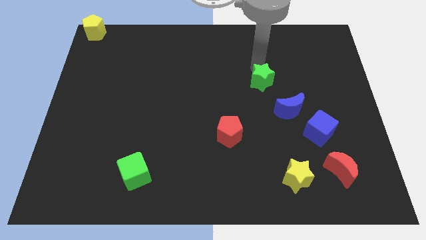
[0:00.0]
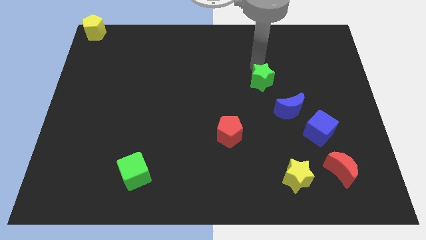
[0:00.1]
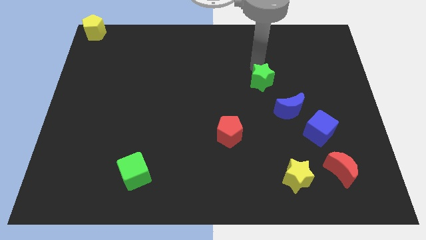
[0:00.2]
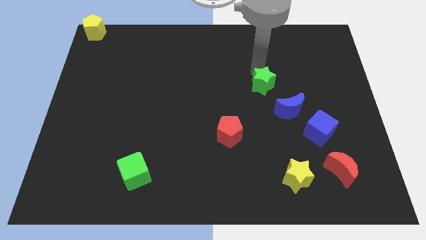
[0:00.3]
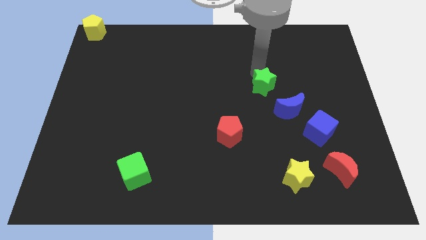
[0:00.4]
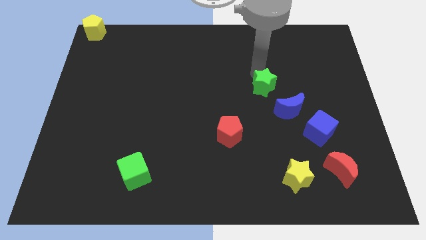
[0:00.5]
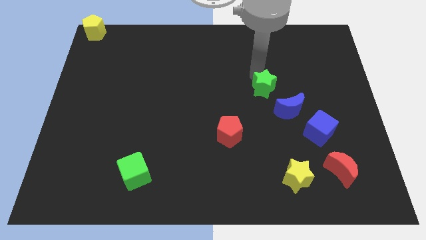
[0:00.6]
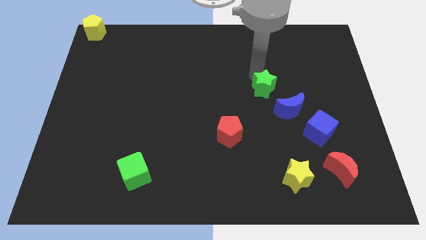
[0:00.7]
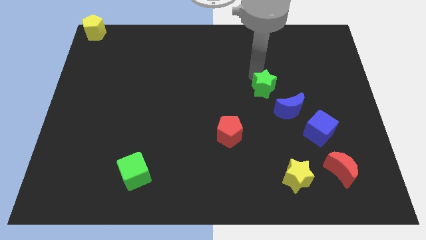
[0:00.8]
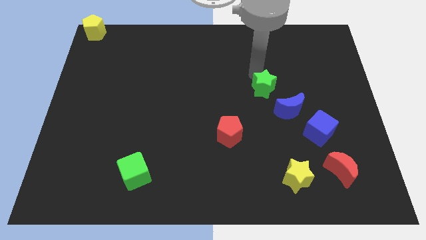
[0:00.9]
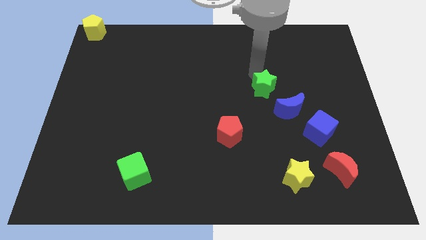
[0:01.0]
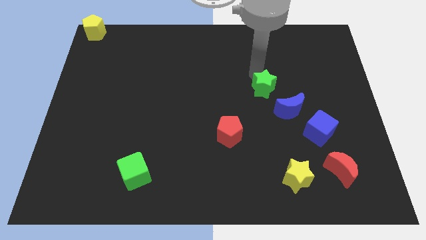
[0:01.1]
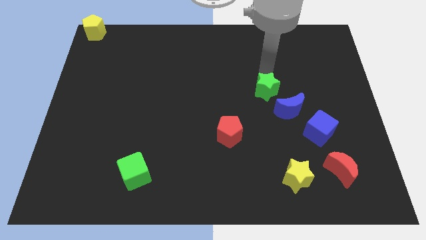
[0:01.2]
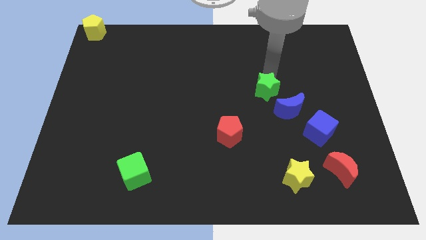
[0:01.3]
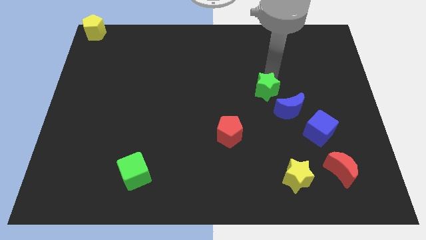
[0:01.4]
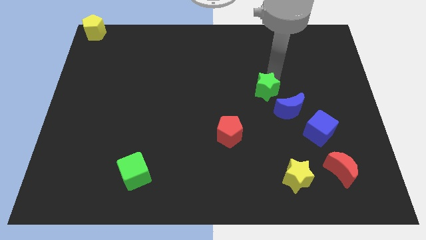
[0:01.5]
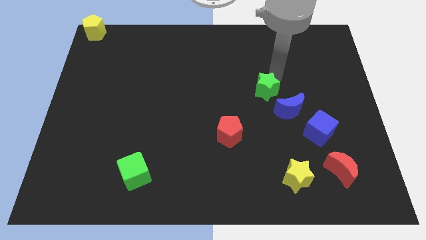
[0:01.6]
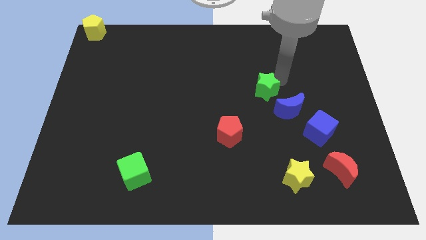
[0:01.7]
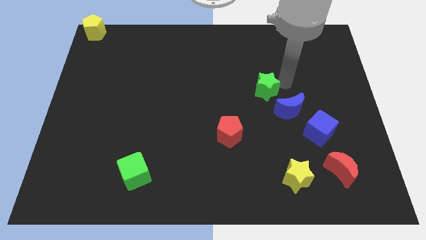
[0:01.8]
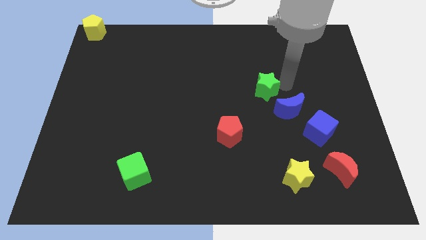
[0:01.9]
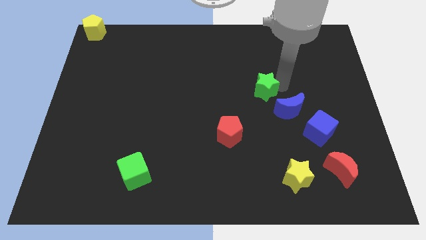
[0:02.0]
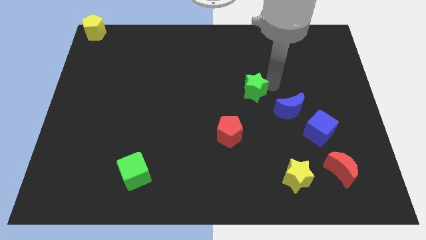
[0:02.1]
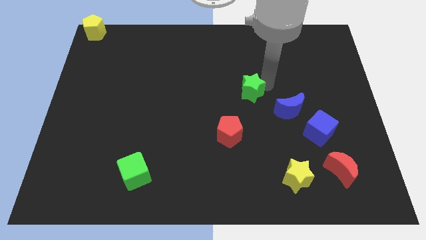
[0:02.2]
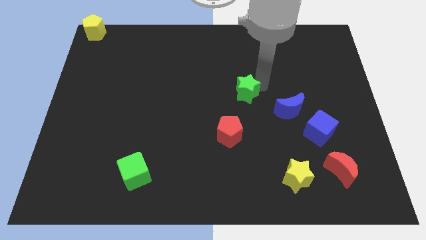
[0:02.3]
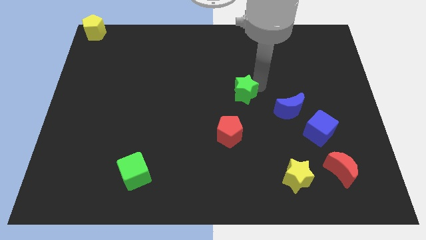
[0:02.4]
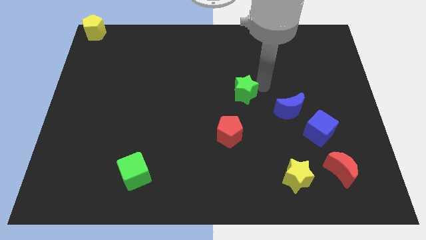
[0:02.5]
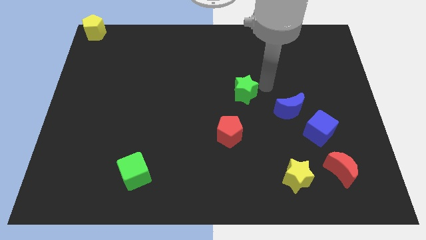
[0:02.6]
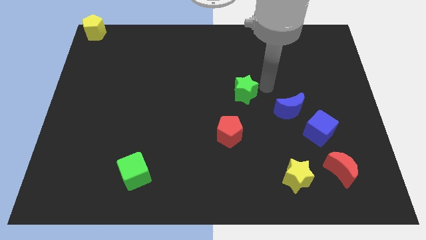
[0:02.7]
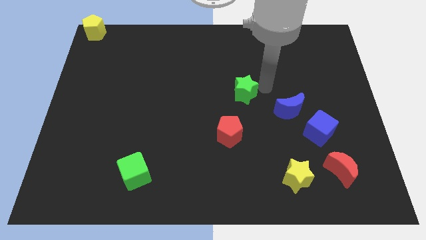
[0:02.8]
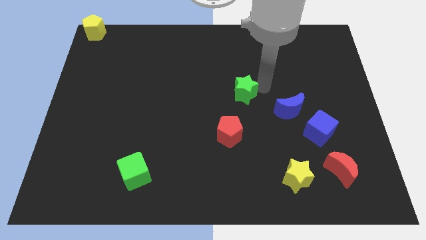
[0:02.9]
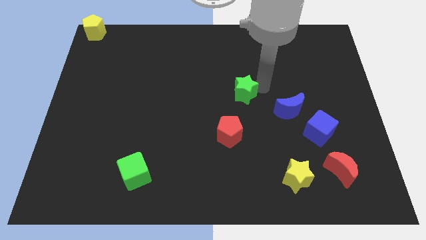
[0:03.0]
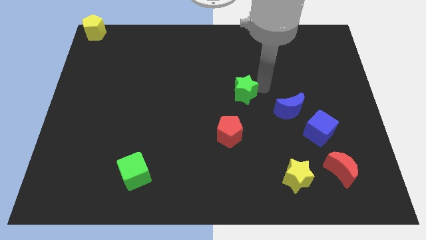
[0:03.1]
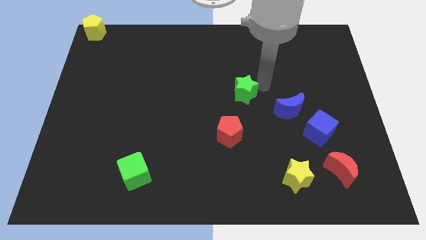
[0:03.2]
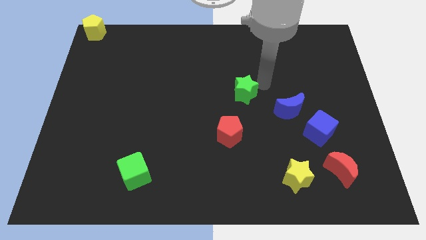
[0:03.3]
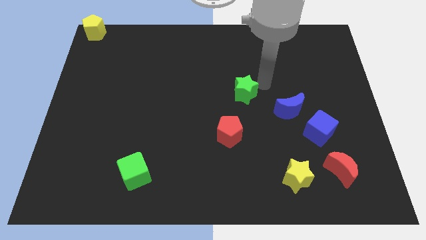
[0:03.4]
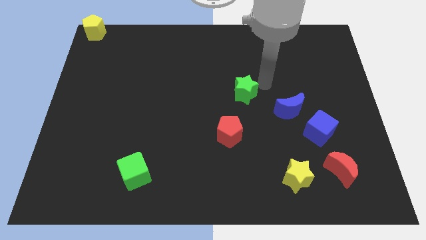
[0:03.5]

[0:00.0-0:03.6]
push the green star slightly to the center of the board

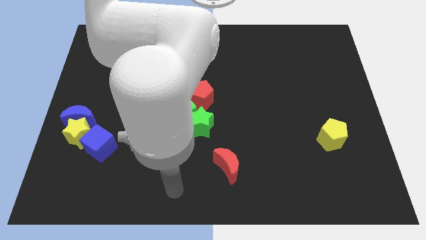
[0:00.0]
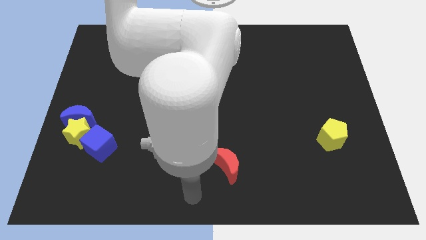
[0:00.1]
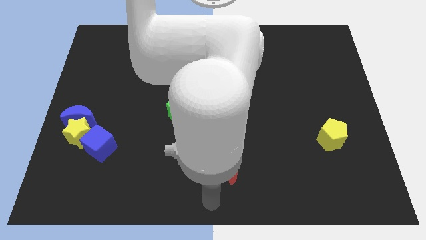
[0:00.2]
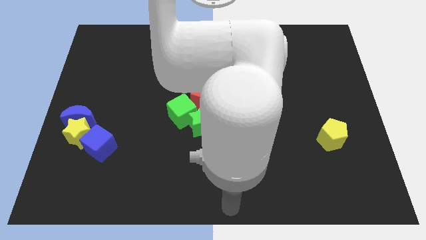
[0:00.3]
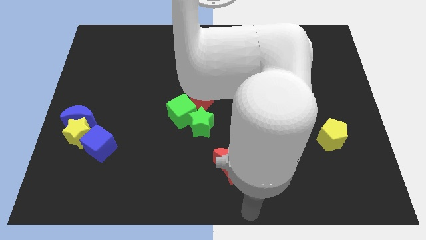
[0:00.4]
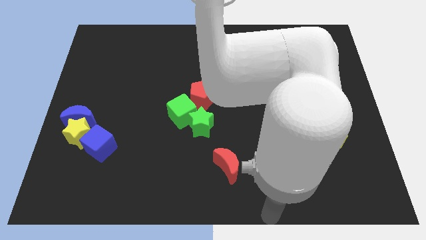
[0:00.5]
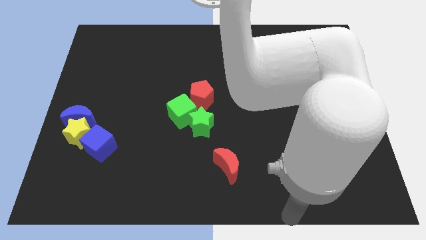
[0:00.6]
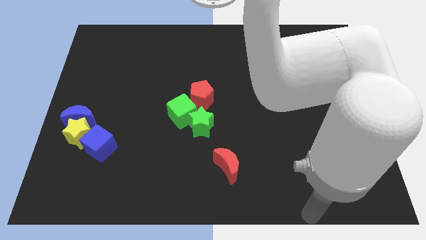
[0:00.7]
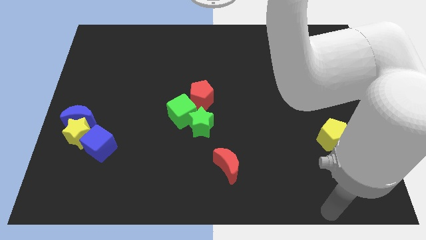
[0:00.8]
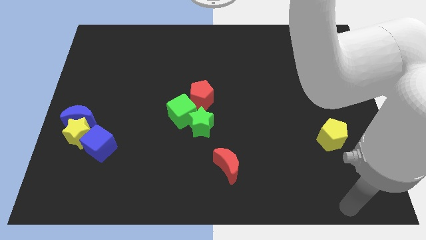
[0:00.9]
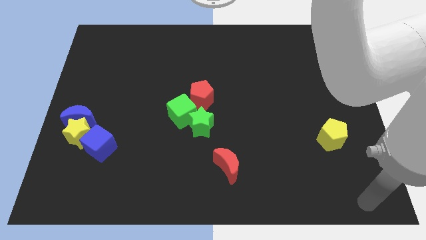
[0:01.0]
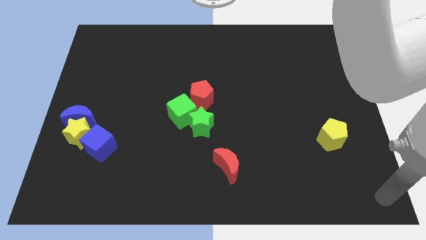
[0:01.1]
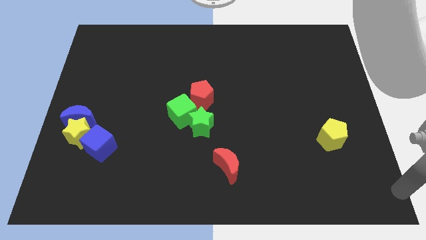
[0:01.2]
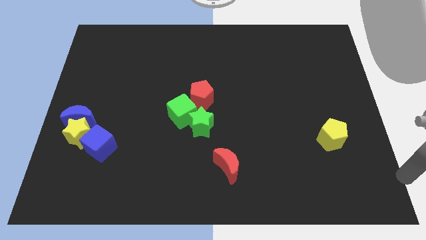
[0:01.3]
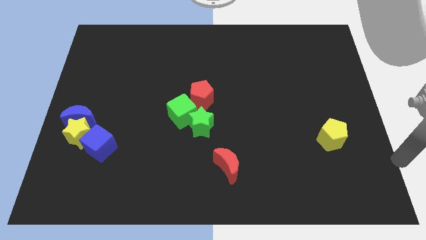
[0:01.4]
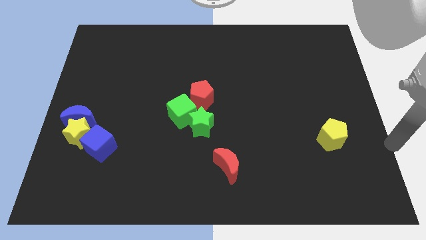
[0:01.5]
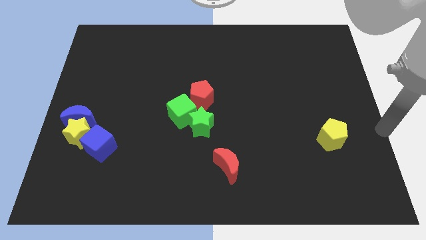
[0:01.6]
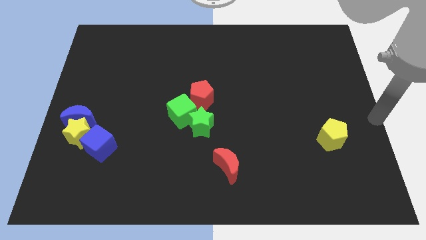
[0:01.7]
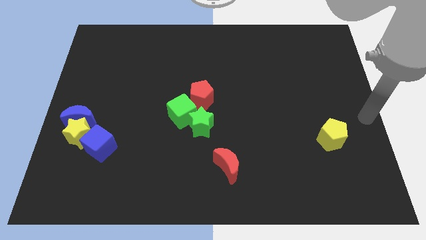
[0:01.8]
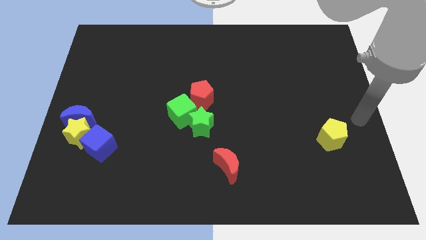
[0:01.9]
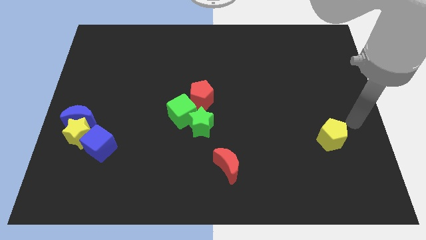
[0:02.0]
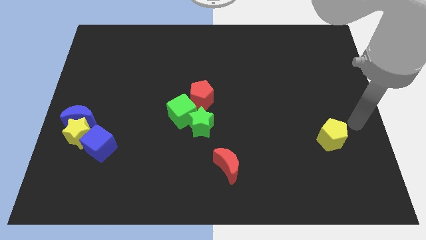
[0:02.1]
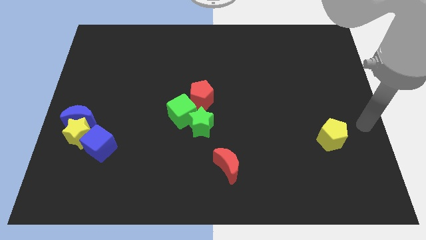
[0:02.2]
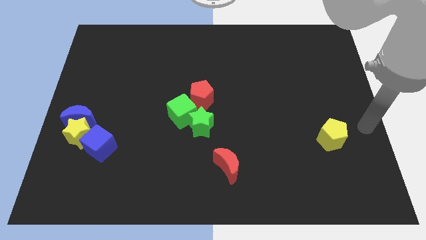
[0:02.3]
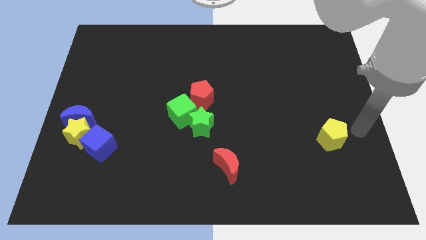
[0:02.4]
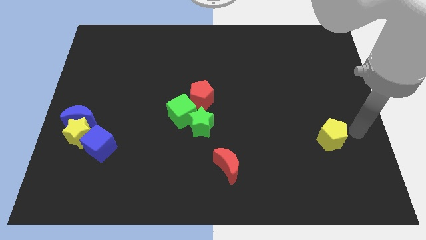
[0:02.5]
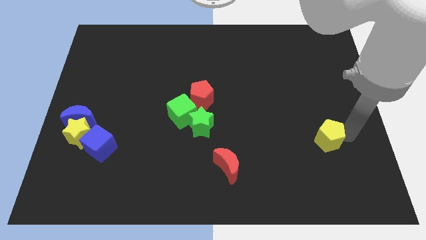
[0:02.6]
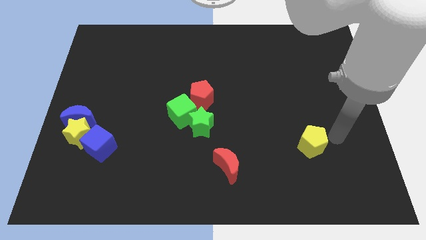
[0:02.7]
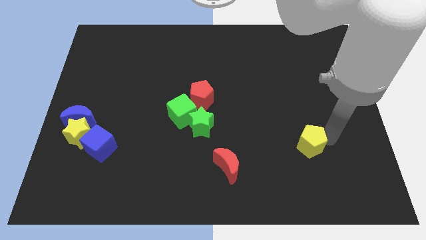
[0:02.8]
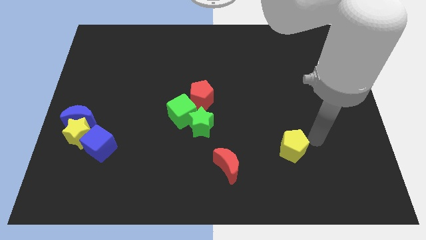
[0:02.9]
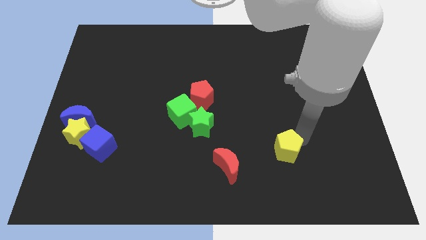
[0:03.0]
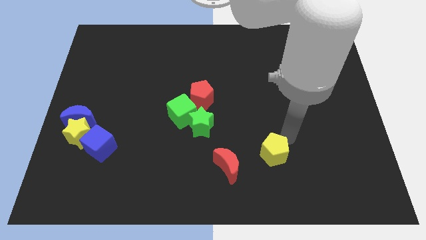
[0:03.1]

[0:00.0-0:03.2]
drag the yellow pentagon towards the red moon

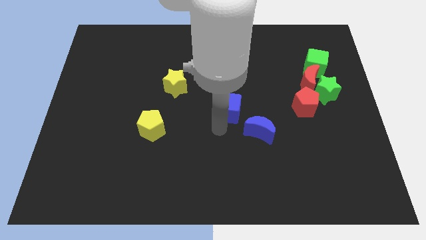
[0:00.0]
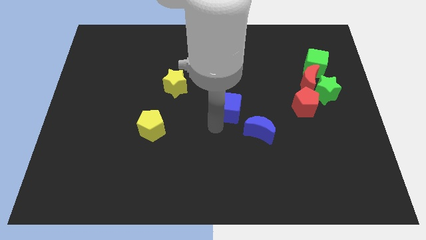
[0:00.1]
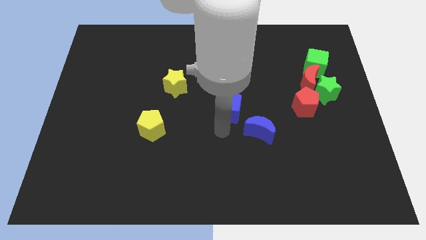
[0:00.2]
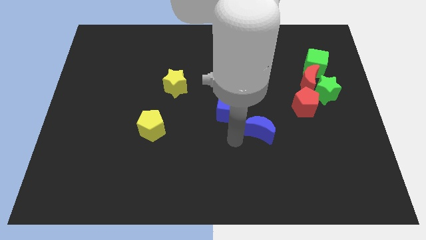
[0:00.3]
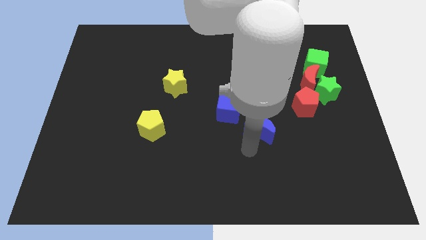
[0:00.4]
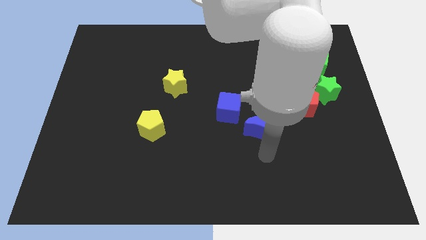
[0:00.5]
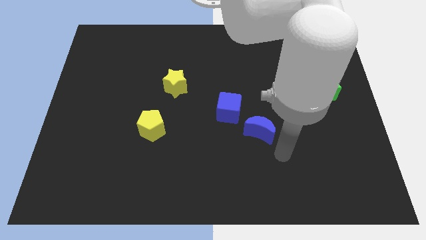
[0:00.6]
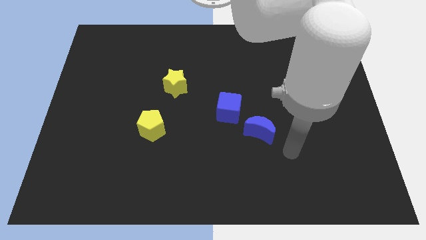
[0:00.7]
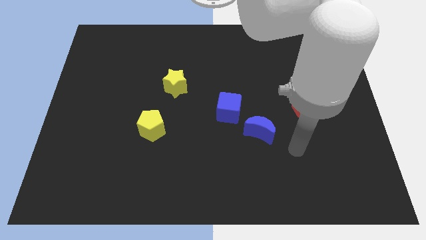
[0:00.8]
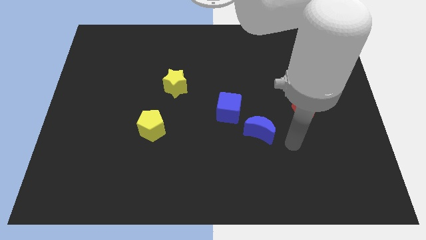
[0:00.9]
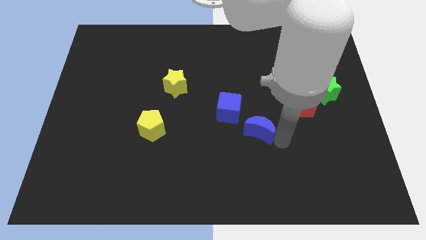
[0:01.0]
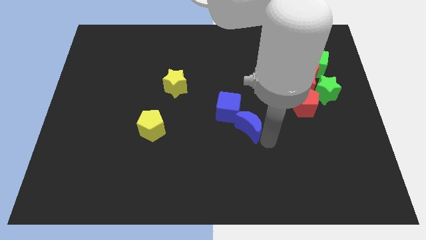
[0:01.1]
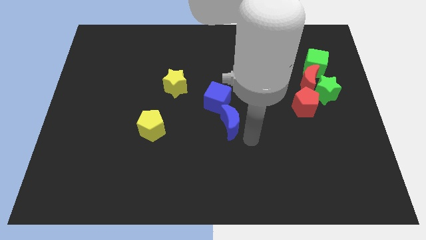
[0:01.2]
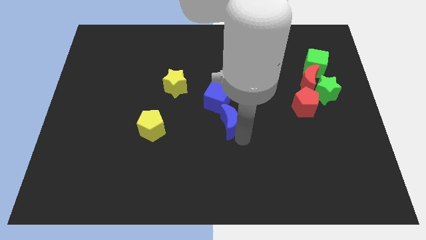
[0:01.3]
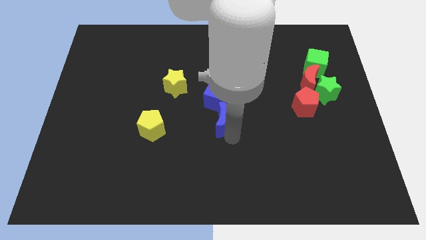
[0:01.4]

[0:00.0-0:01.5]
move blue blocks to the middle of the board

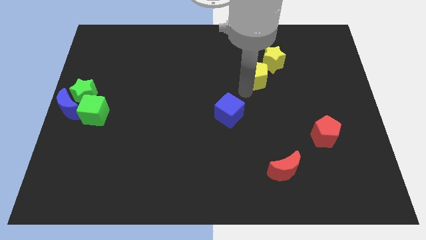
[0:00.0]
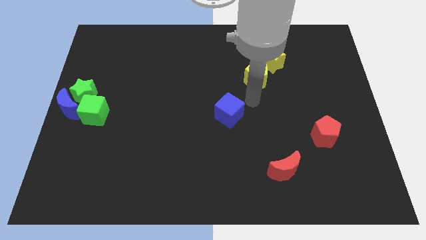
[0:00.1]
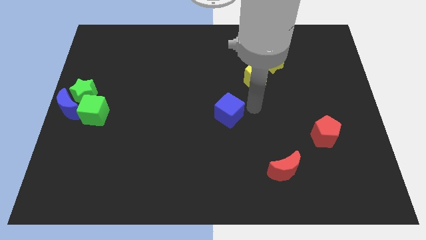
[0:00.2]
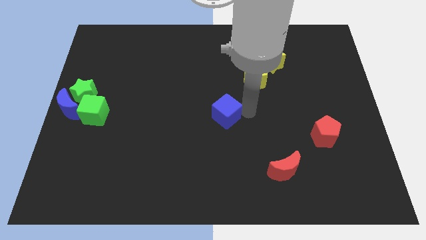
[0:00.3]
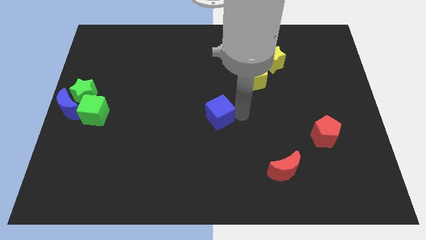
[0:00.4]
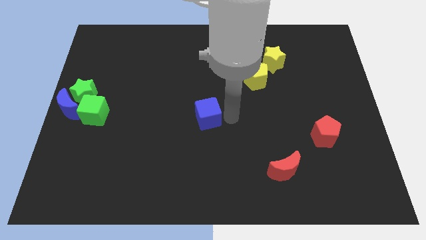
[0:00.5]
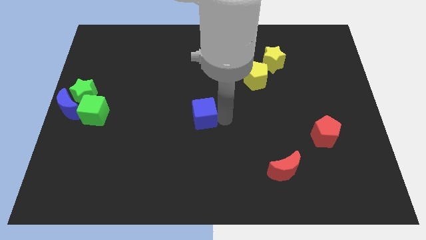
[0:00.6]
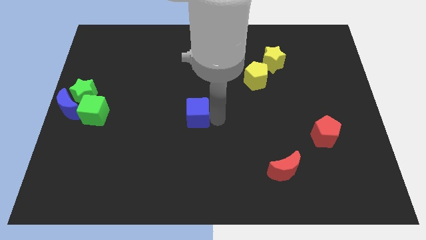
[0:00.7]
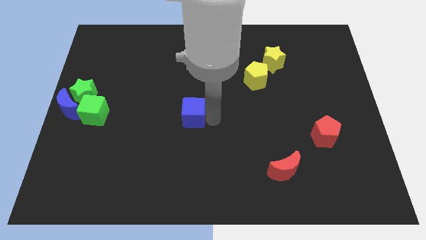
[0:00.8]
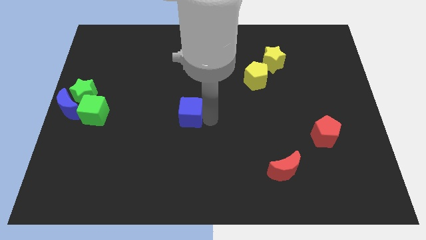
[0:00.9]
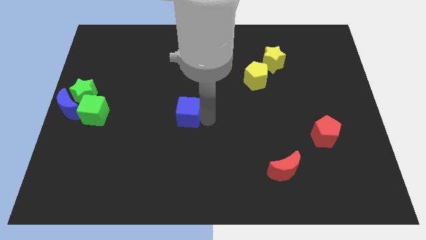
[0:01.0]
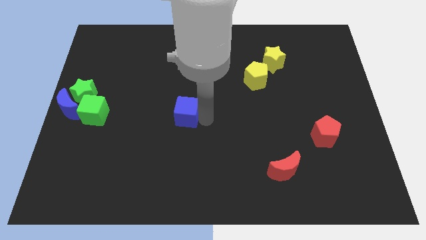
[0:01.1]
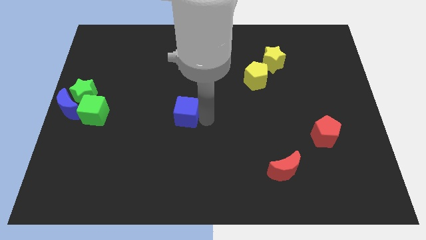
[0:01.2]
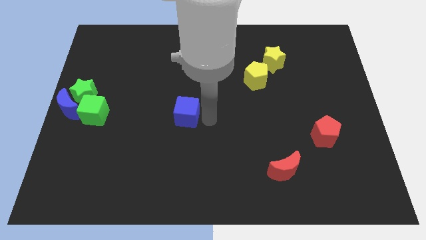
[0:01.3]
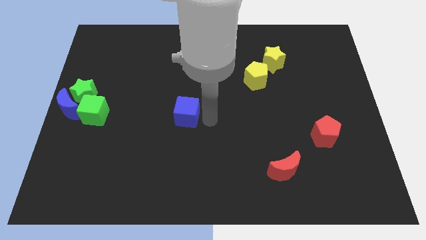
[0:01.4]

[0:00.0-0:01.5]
place the blue cube at the center
